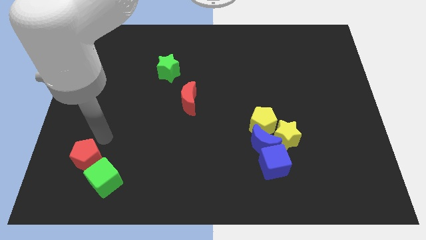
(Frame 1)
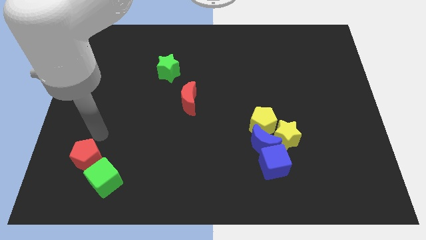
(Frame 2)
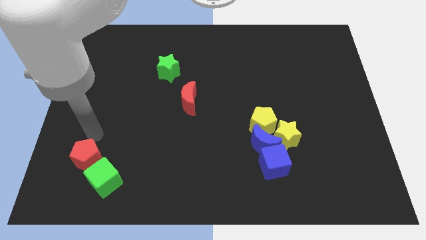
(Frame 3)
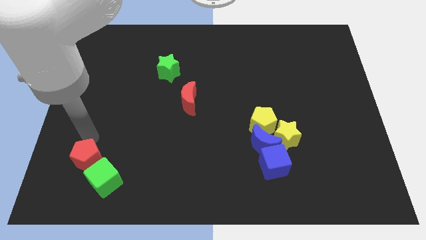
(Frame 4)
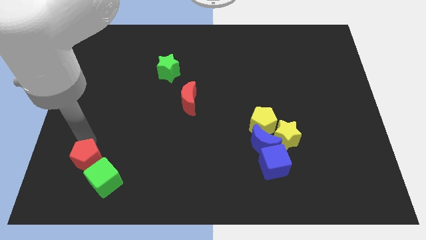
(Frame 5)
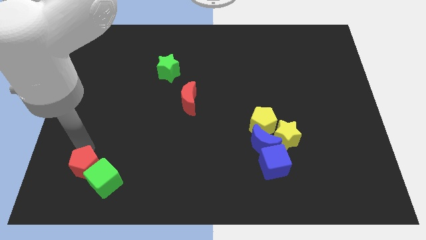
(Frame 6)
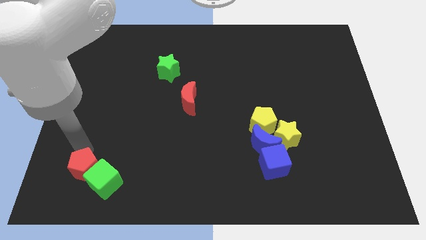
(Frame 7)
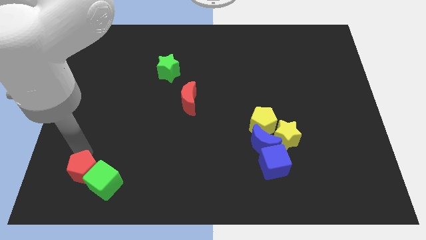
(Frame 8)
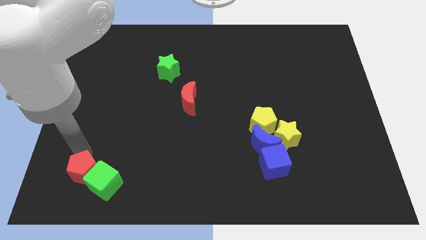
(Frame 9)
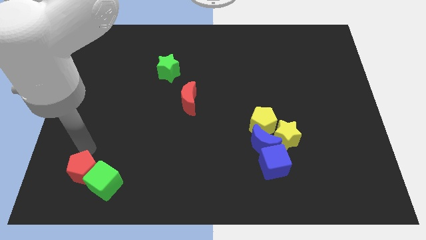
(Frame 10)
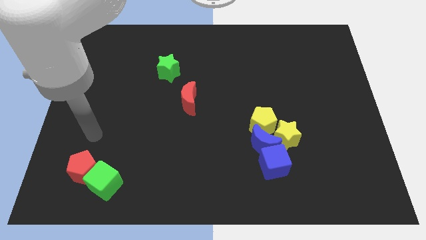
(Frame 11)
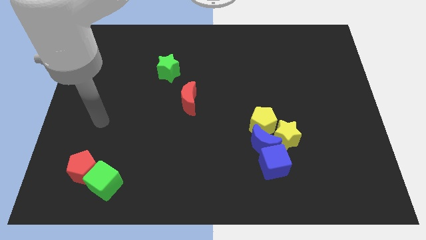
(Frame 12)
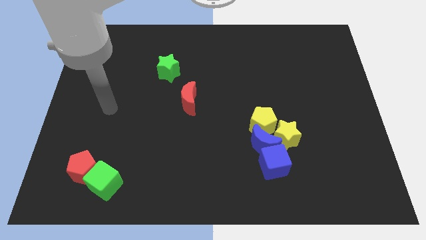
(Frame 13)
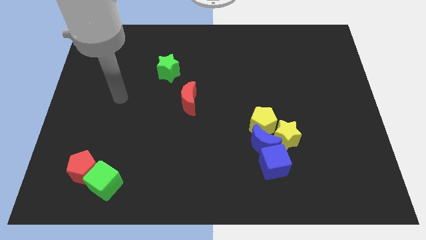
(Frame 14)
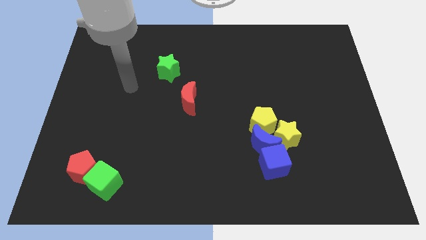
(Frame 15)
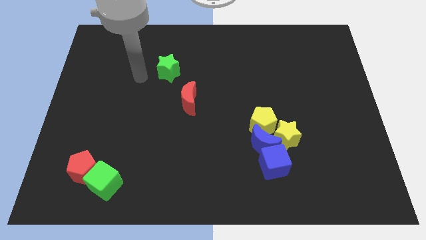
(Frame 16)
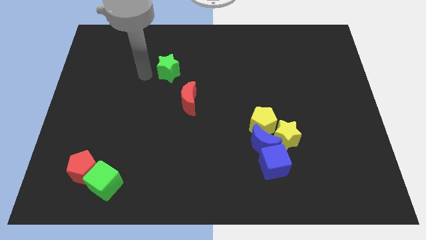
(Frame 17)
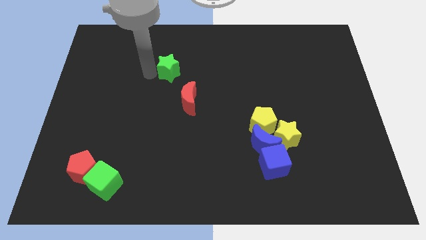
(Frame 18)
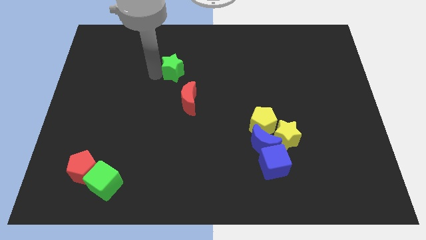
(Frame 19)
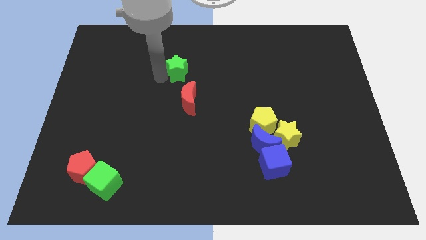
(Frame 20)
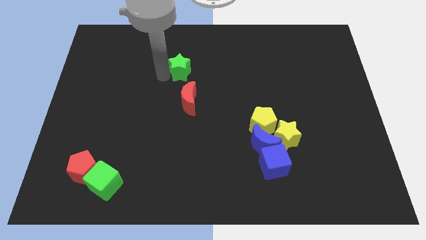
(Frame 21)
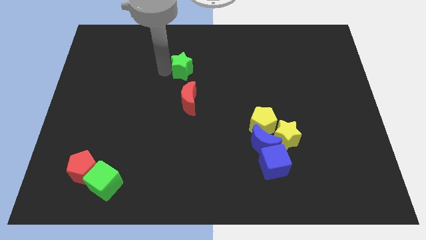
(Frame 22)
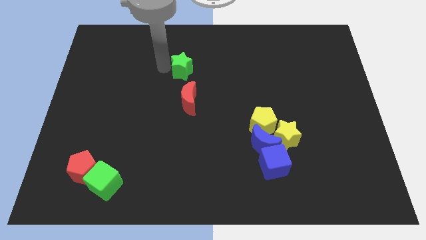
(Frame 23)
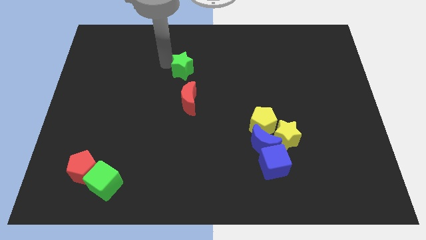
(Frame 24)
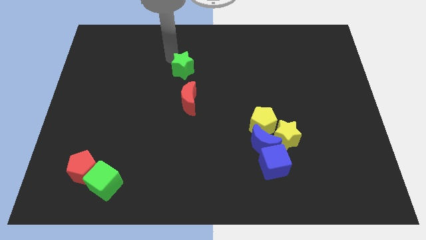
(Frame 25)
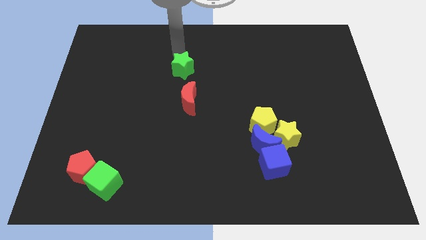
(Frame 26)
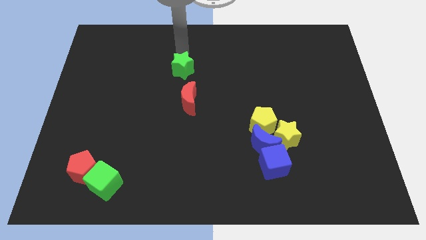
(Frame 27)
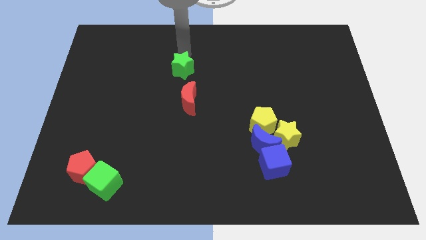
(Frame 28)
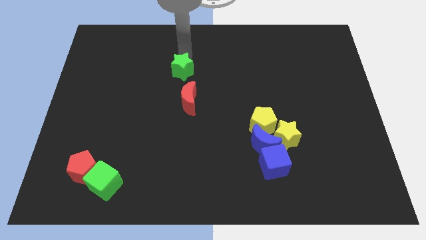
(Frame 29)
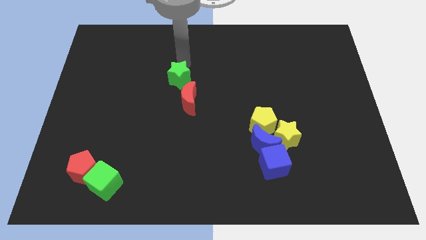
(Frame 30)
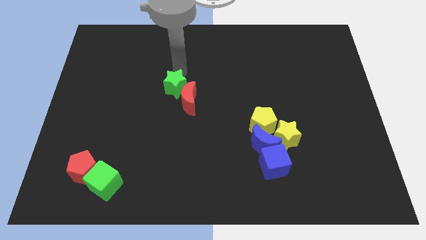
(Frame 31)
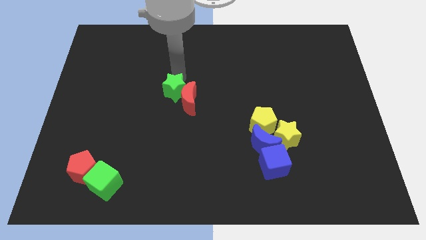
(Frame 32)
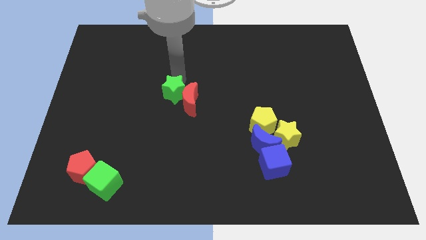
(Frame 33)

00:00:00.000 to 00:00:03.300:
move the green star left beside the red moon

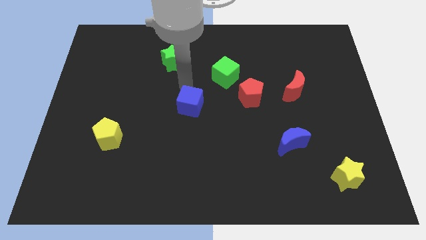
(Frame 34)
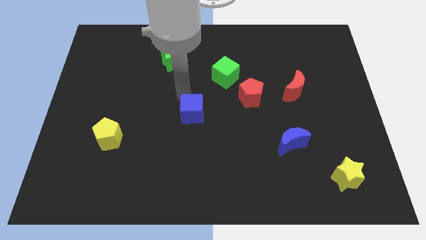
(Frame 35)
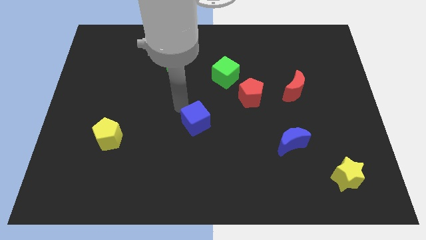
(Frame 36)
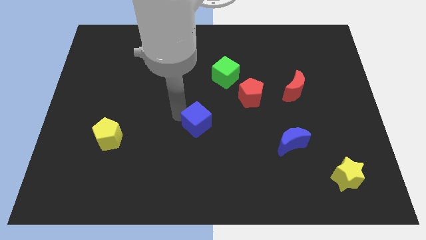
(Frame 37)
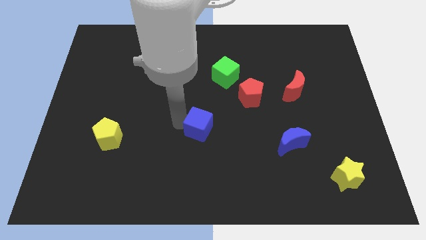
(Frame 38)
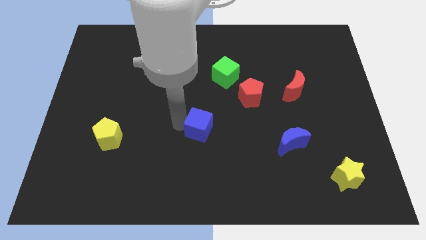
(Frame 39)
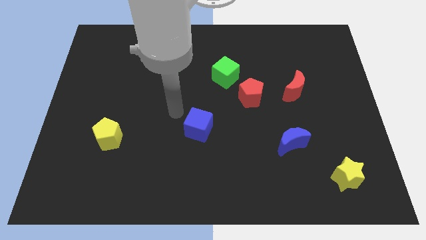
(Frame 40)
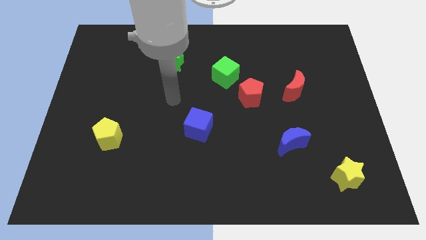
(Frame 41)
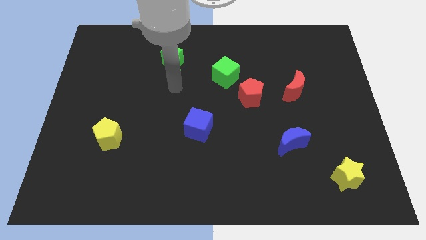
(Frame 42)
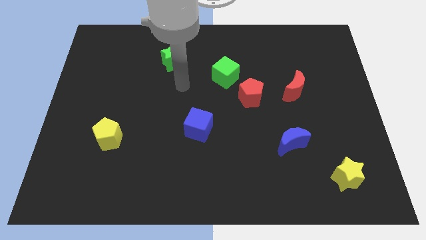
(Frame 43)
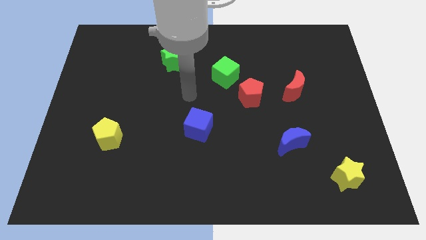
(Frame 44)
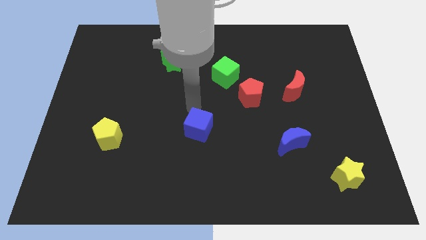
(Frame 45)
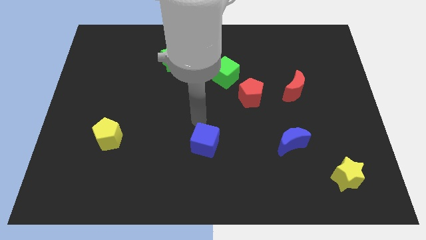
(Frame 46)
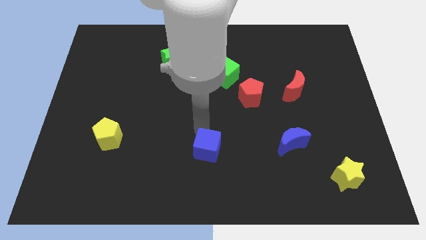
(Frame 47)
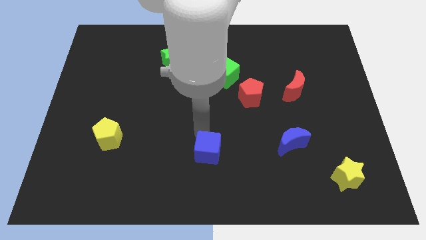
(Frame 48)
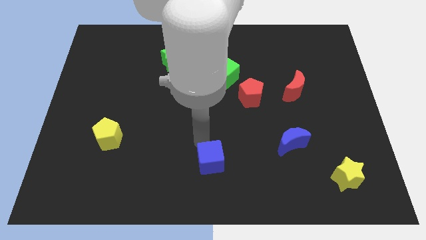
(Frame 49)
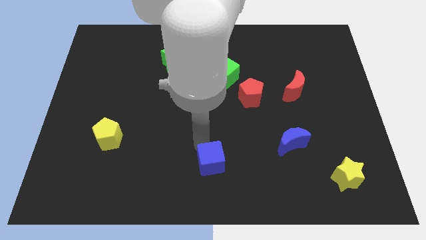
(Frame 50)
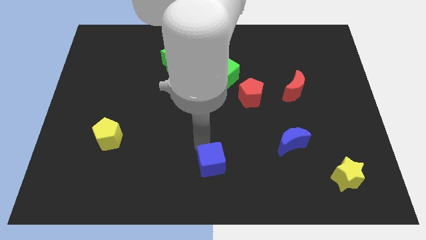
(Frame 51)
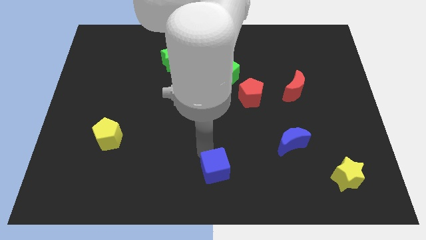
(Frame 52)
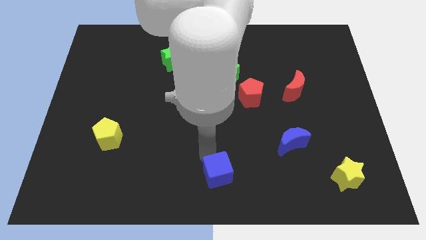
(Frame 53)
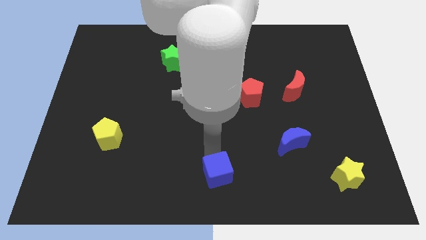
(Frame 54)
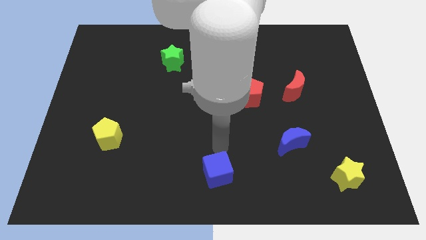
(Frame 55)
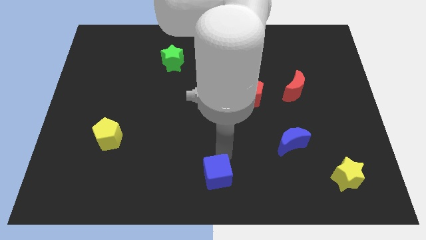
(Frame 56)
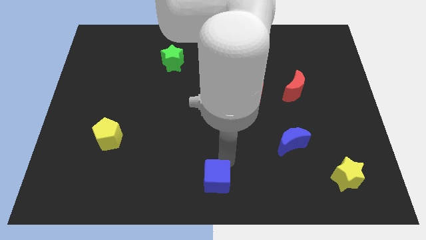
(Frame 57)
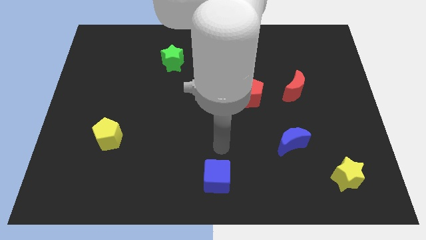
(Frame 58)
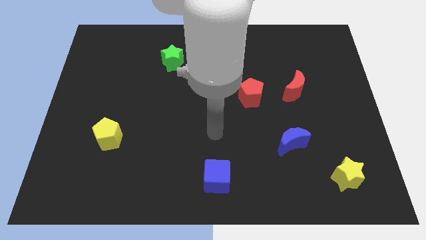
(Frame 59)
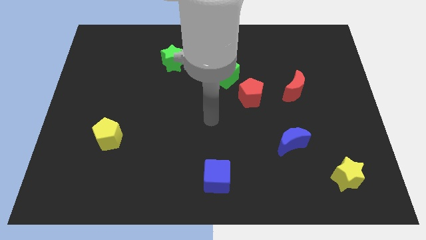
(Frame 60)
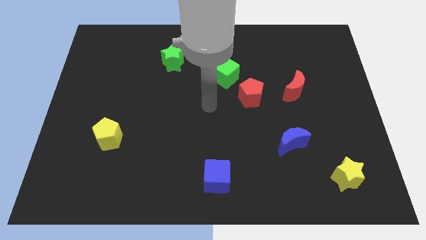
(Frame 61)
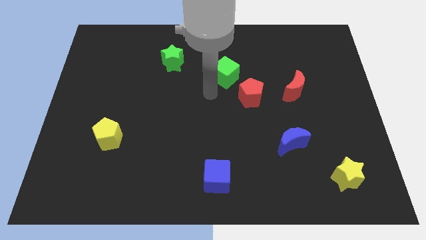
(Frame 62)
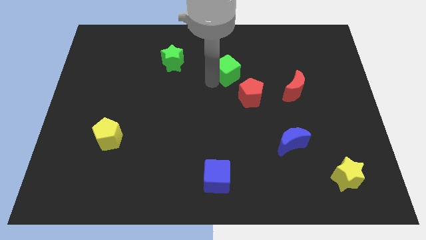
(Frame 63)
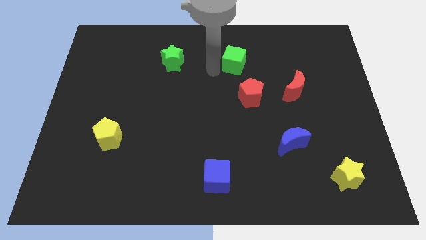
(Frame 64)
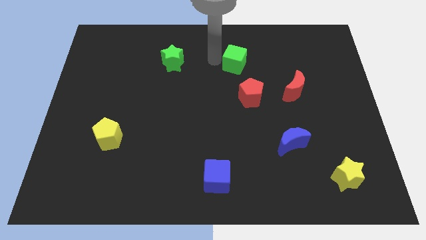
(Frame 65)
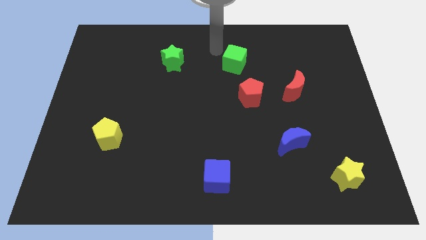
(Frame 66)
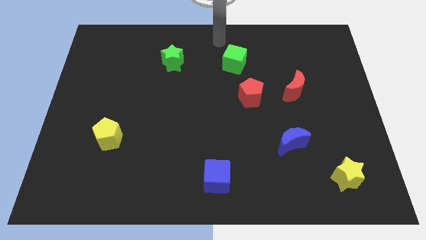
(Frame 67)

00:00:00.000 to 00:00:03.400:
place the blue cube at bottom center of the board

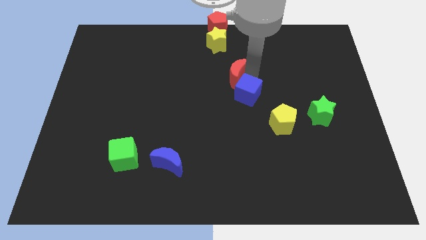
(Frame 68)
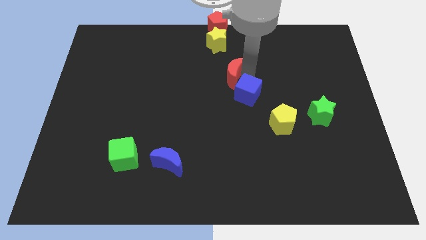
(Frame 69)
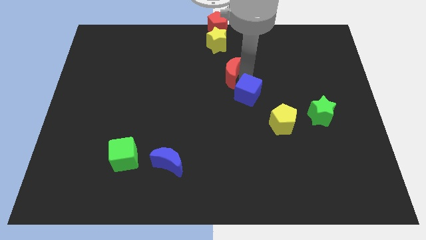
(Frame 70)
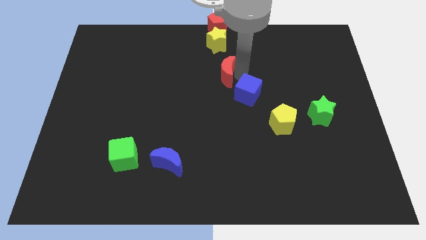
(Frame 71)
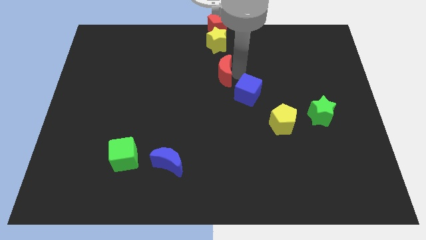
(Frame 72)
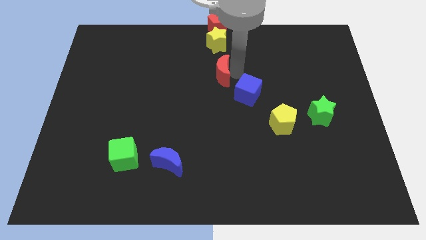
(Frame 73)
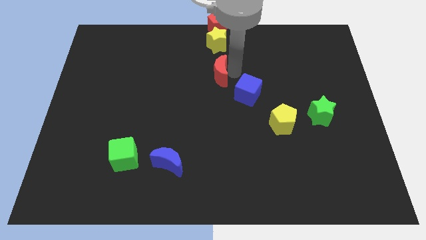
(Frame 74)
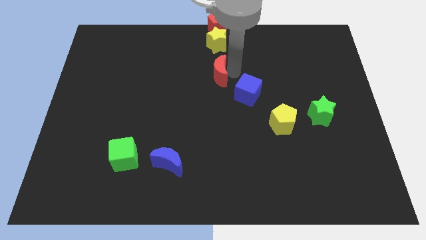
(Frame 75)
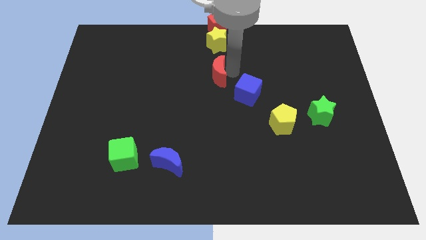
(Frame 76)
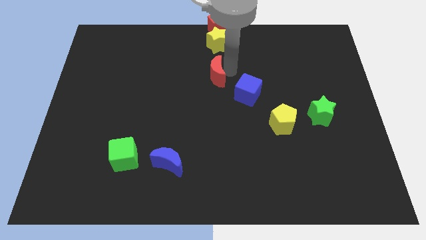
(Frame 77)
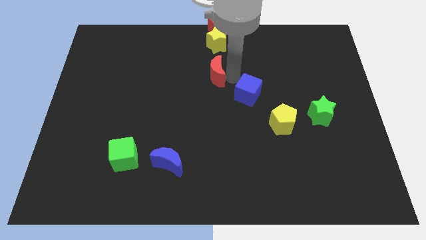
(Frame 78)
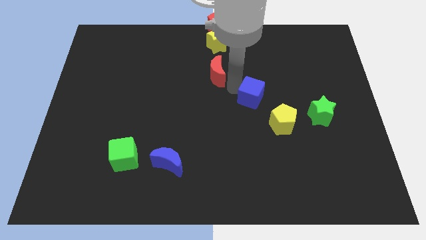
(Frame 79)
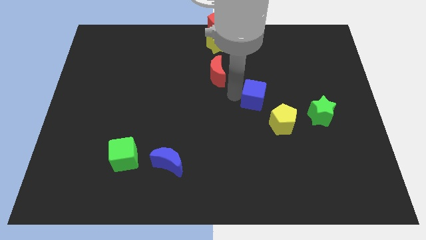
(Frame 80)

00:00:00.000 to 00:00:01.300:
put red crescent below yellow star

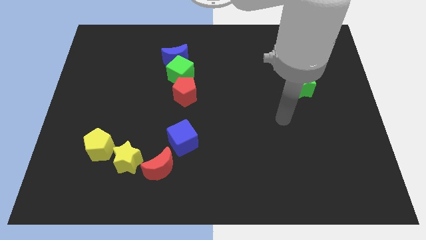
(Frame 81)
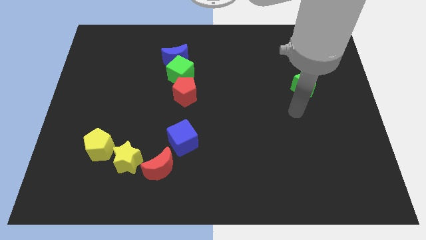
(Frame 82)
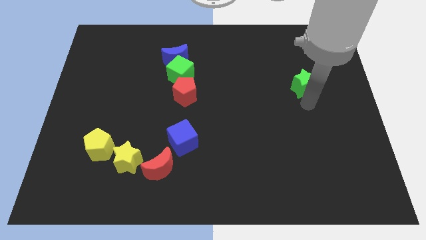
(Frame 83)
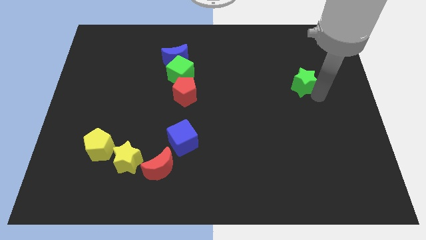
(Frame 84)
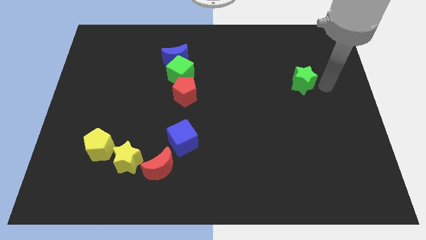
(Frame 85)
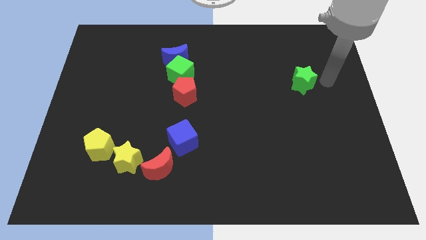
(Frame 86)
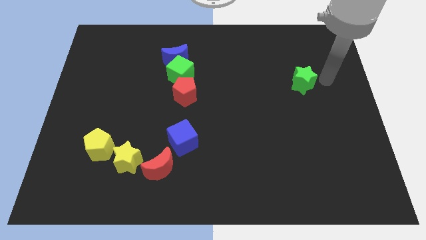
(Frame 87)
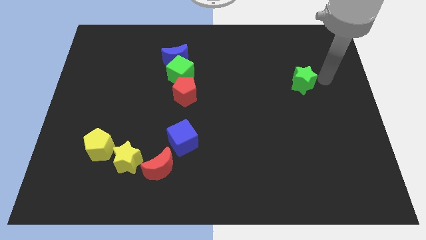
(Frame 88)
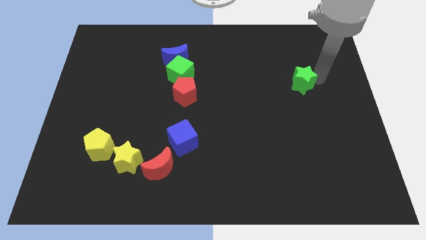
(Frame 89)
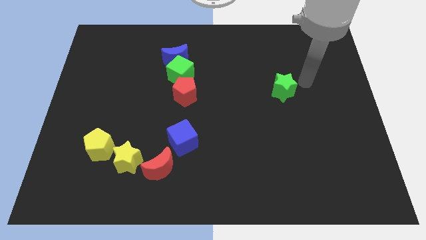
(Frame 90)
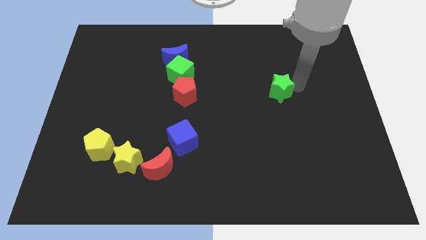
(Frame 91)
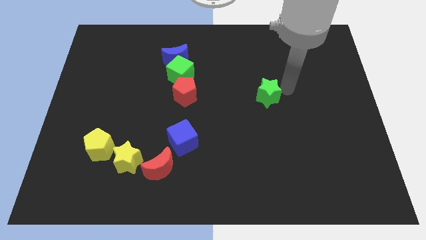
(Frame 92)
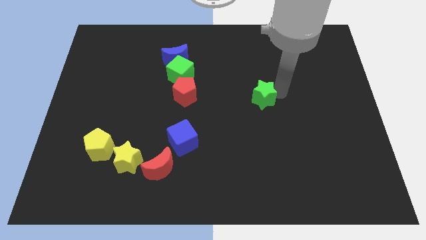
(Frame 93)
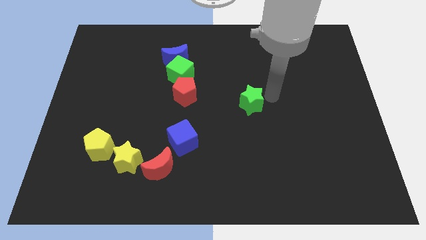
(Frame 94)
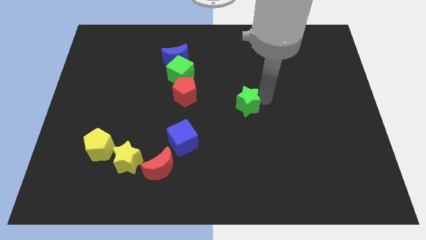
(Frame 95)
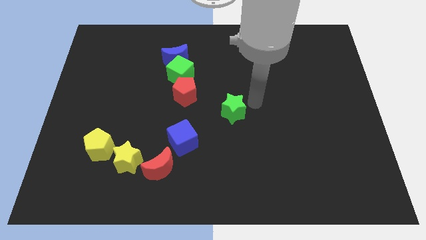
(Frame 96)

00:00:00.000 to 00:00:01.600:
push the green star towards the blue cube
